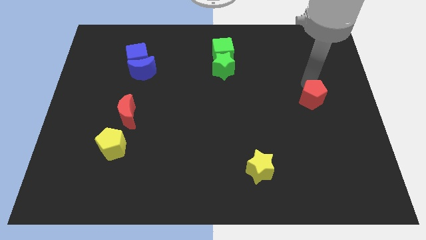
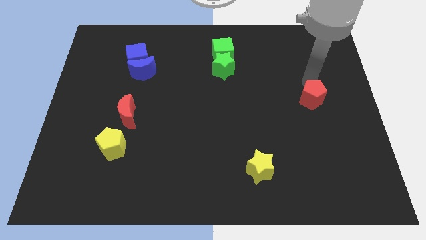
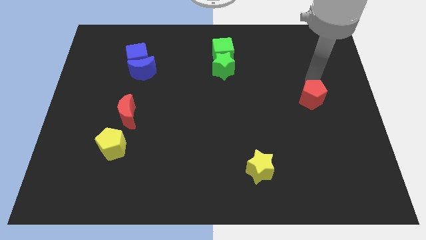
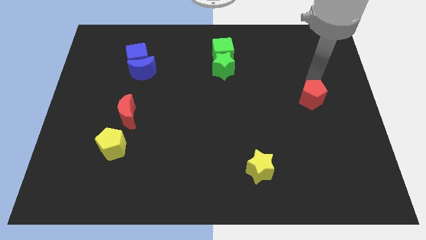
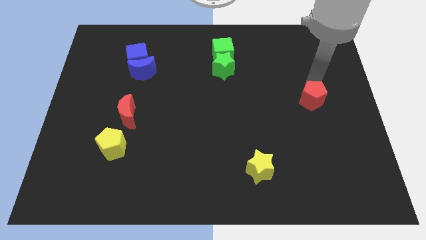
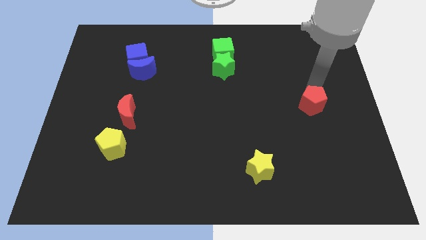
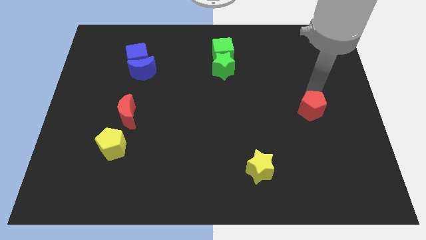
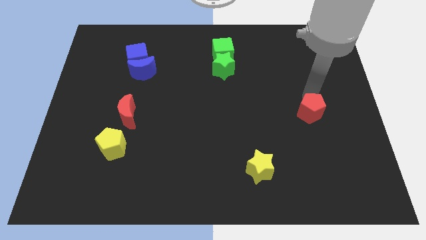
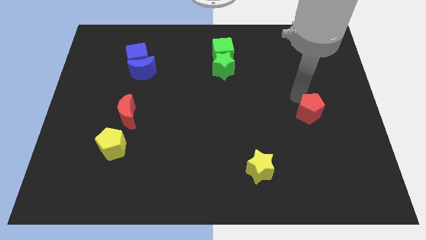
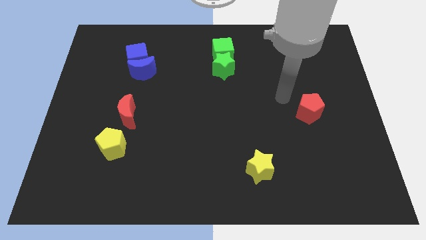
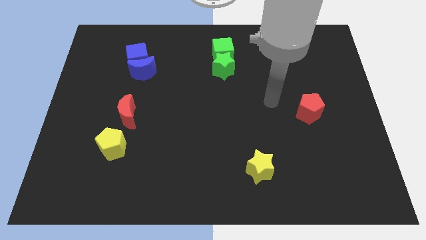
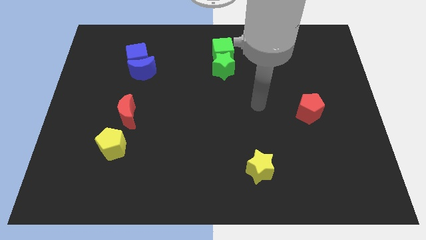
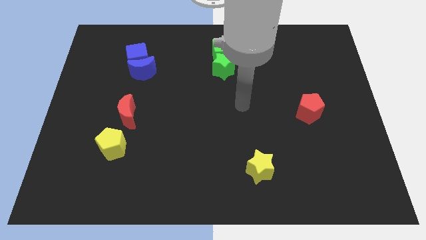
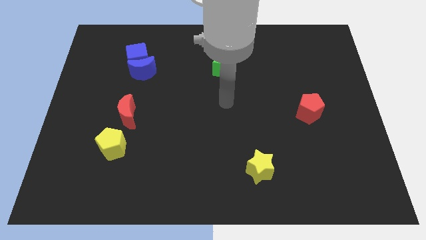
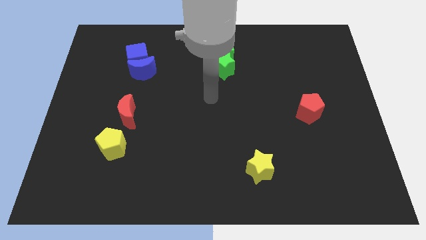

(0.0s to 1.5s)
push the red pentagon slightly to the bottom side of board

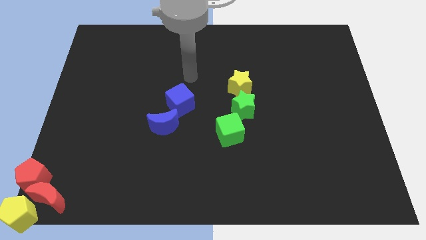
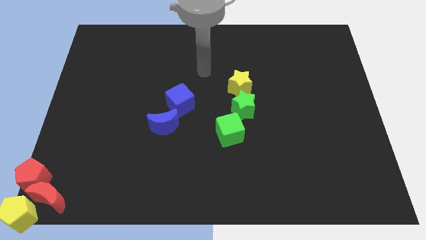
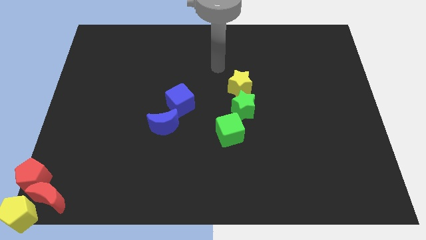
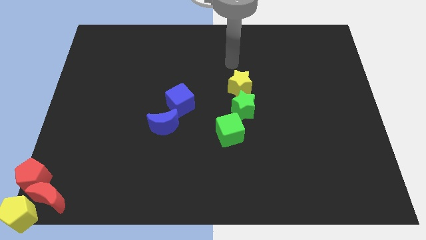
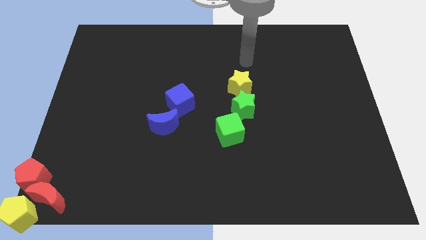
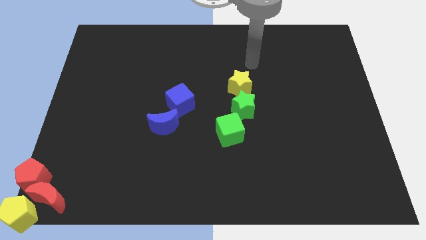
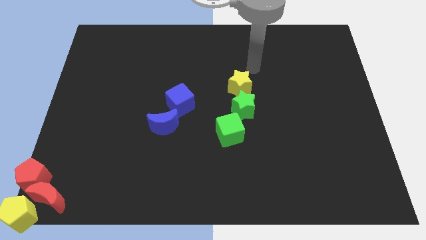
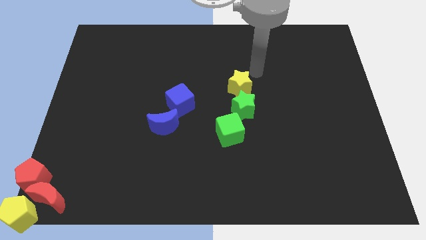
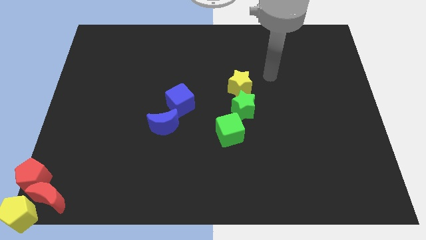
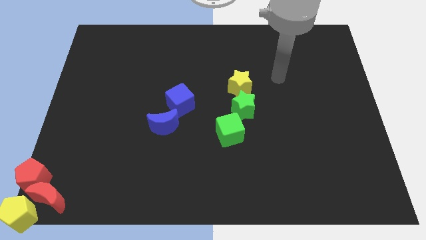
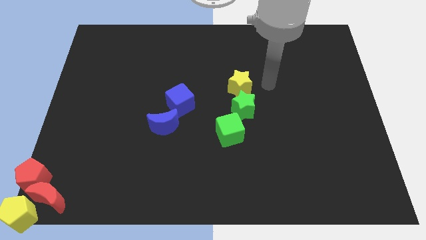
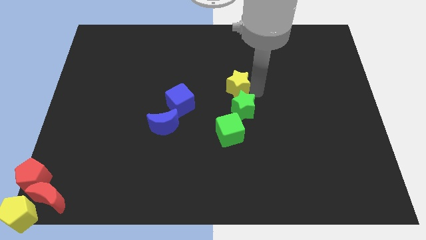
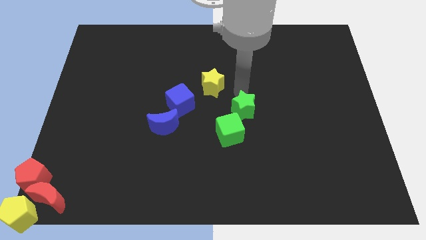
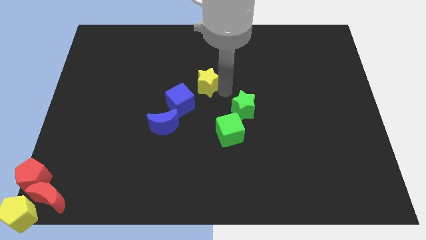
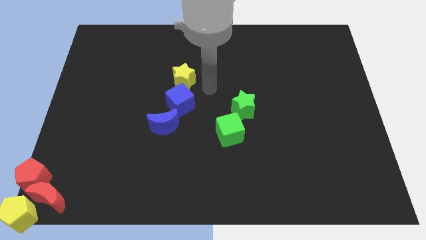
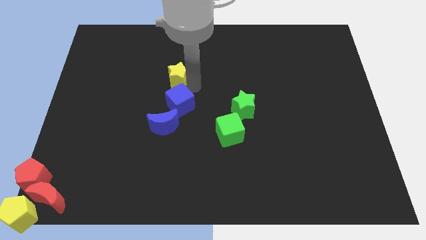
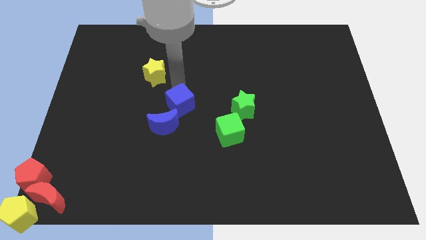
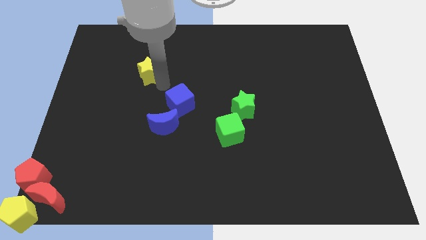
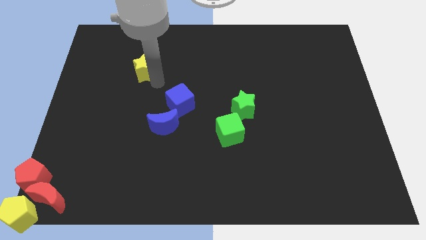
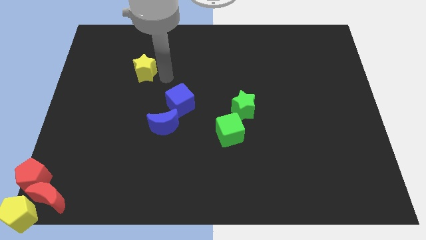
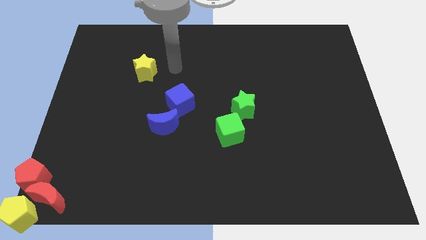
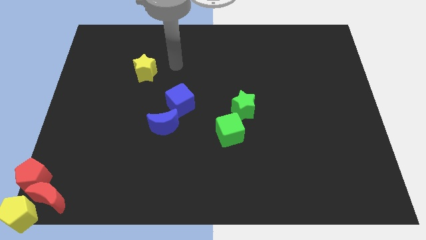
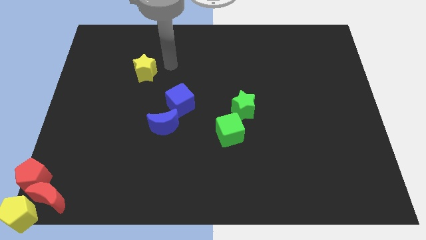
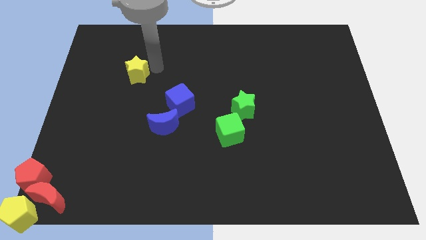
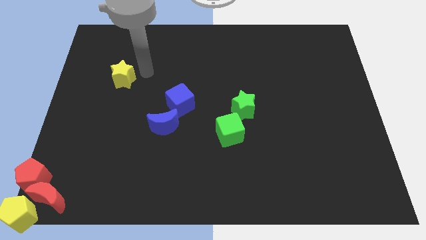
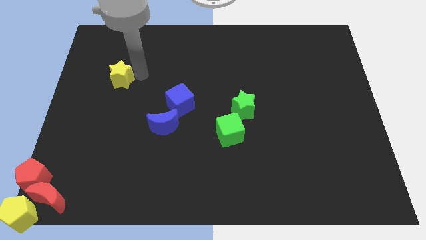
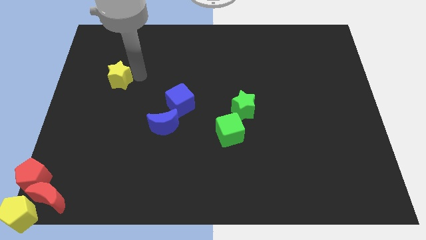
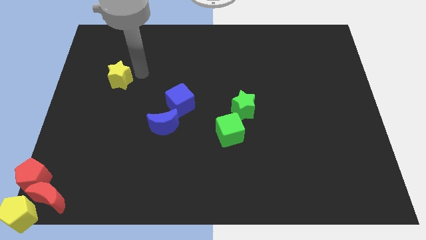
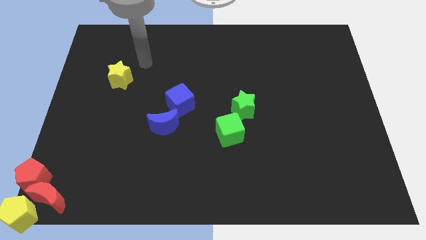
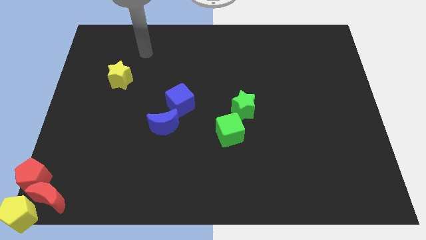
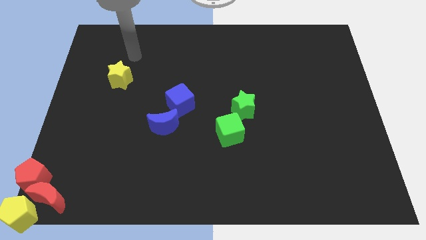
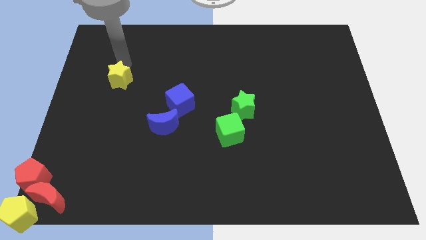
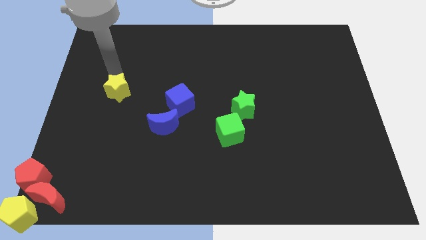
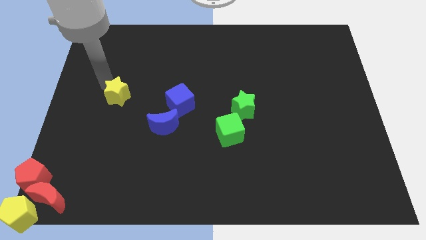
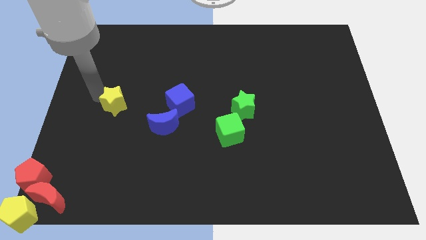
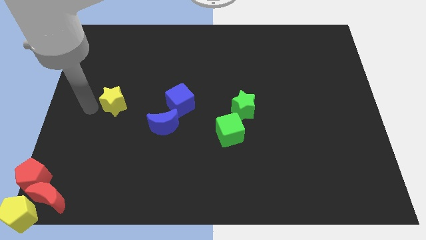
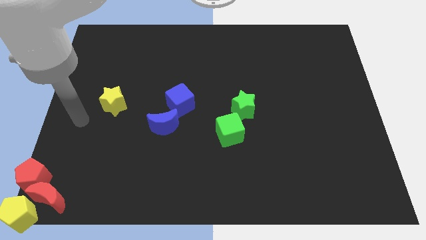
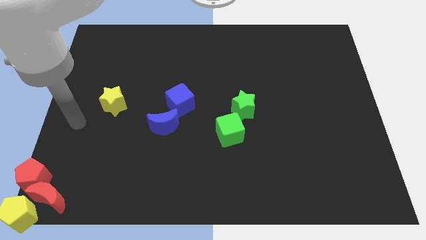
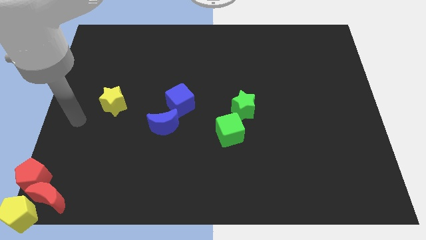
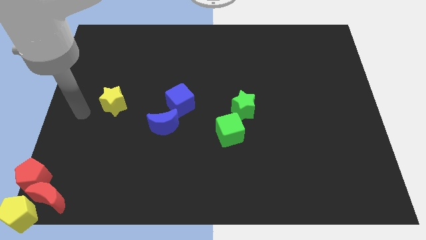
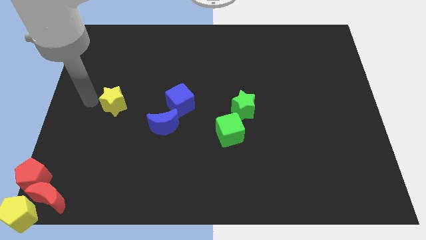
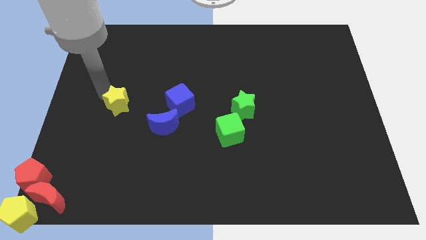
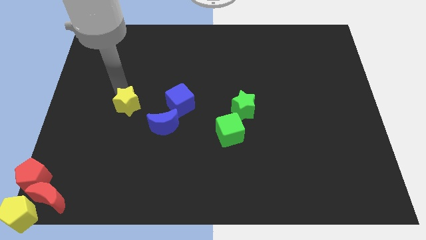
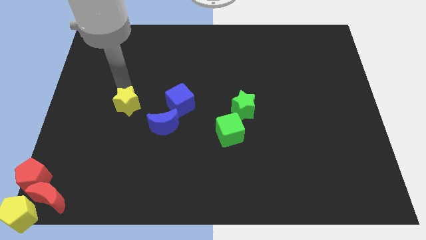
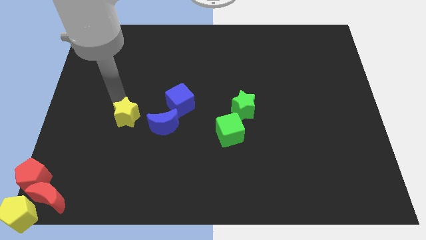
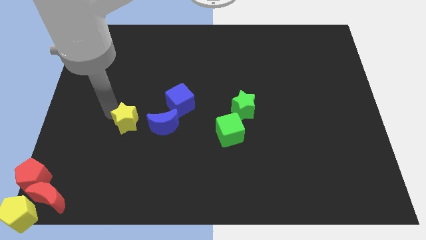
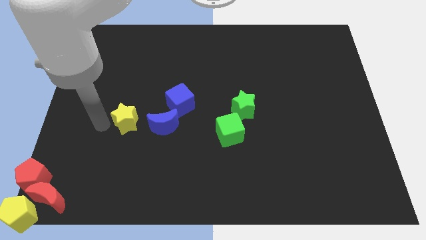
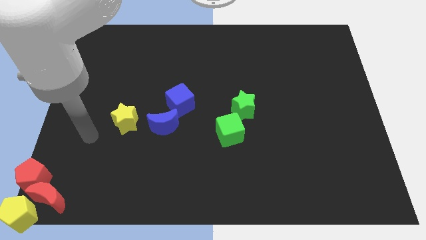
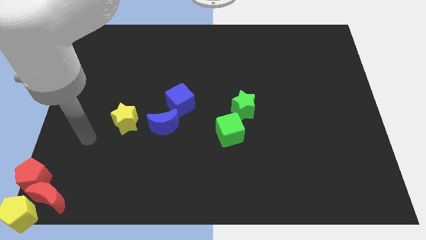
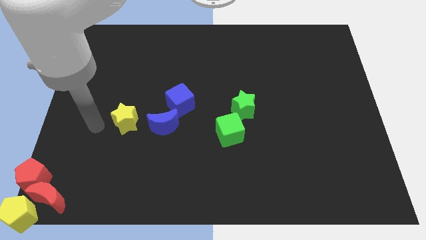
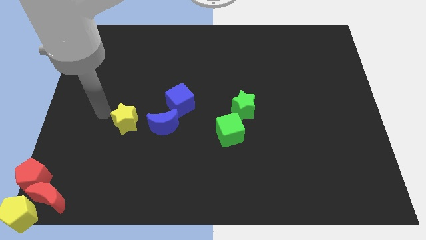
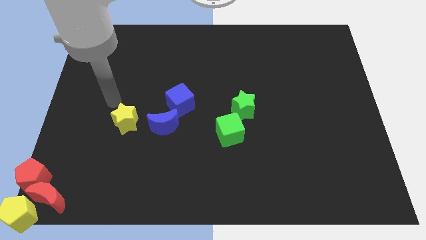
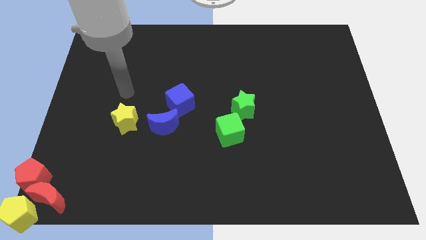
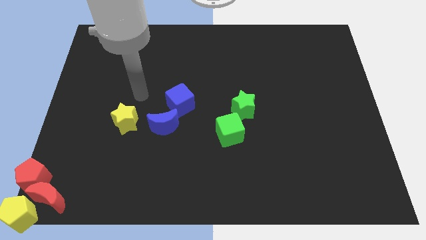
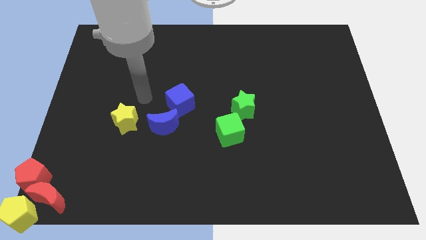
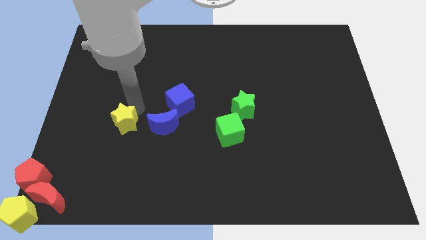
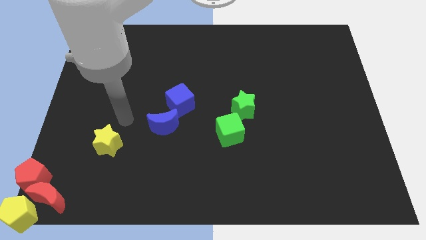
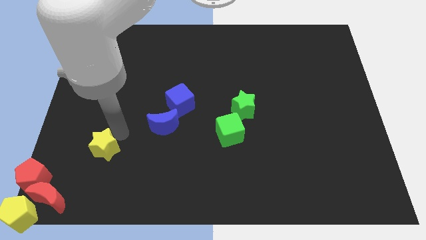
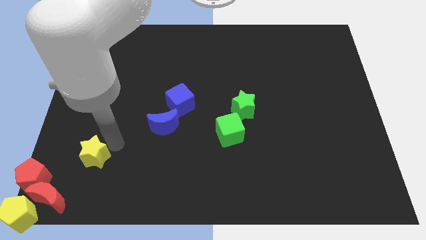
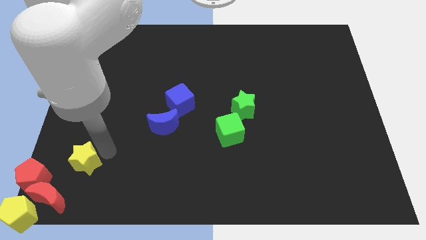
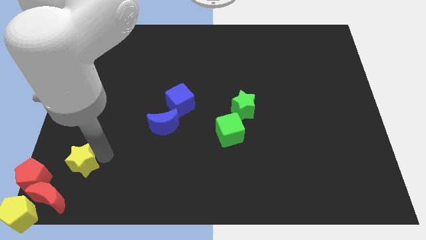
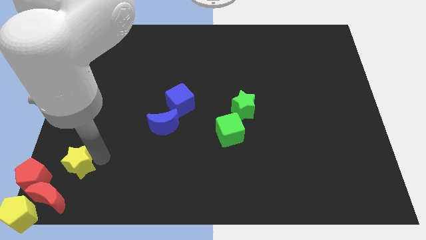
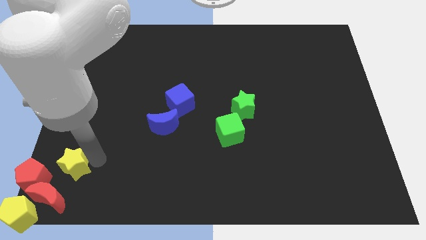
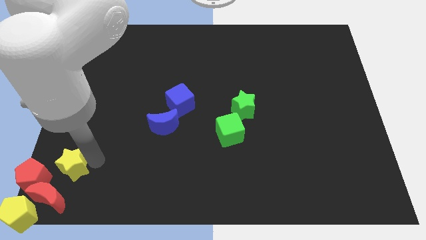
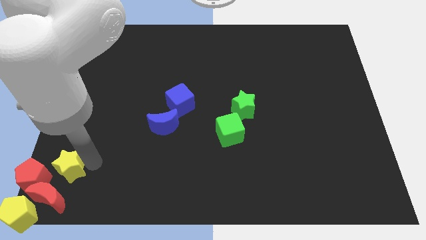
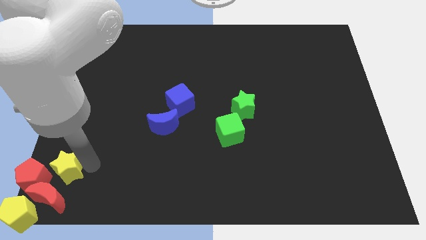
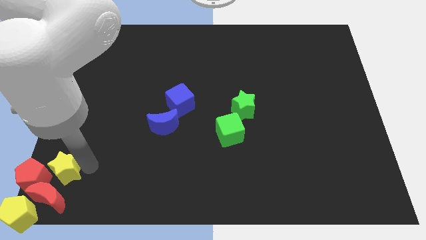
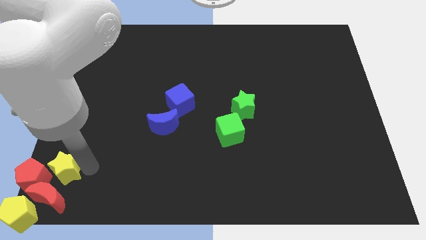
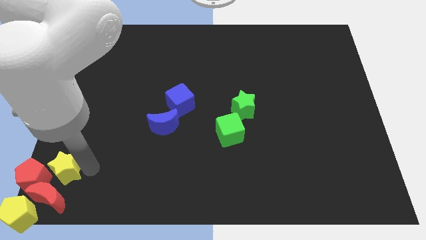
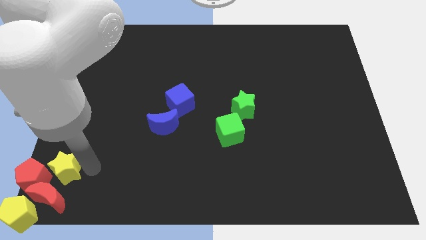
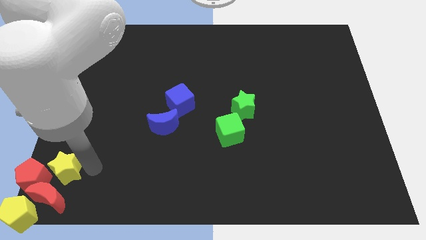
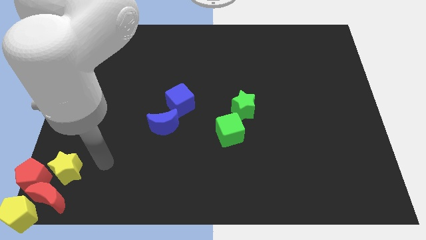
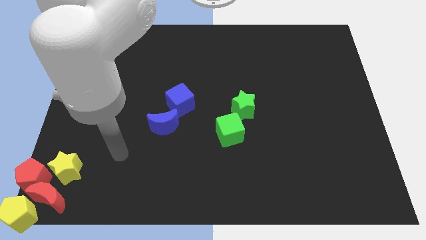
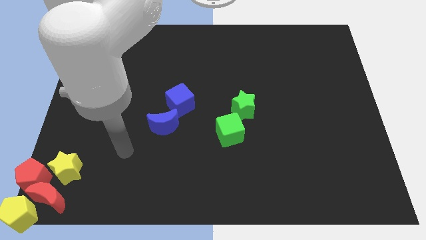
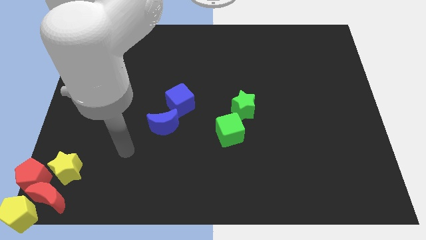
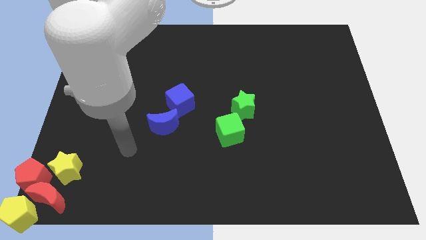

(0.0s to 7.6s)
push the yellow star into the group of blocks
